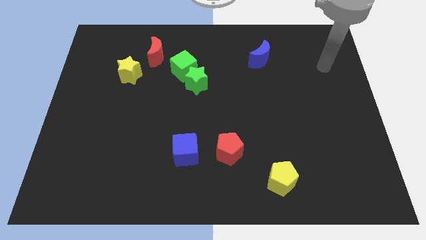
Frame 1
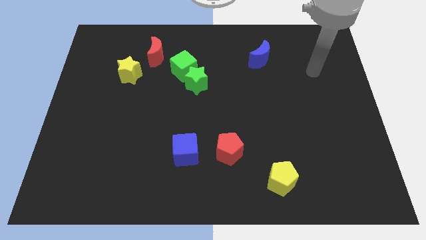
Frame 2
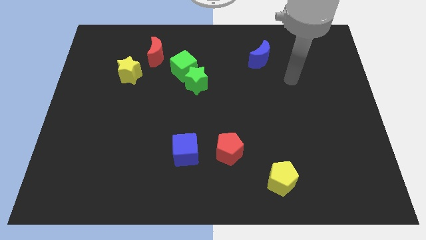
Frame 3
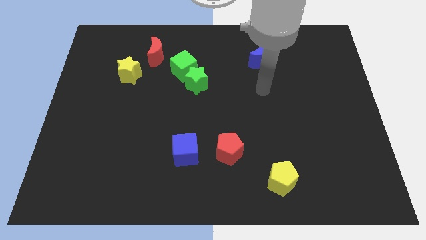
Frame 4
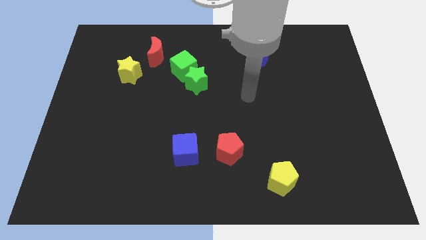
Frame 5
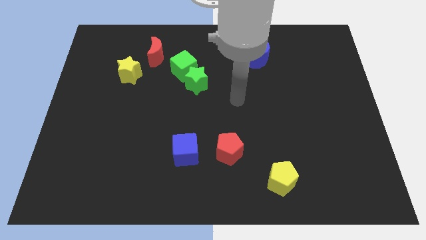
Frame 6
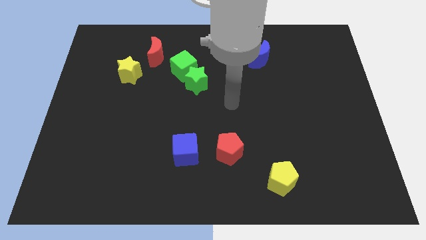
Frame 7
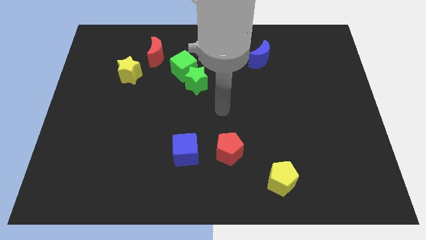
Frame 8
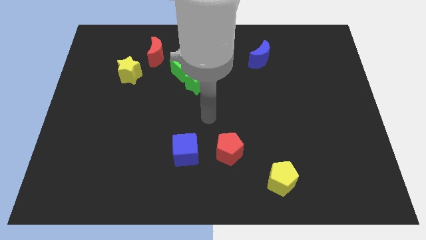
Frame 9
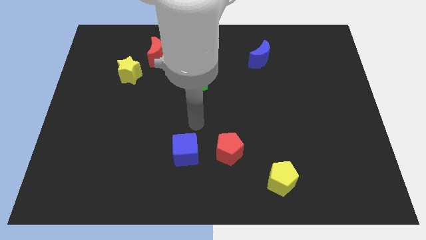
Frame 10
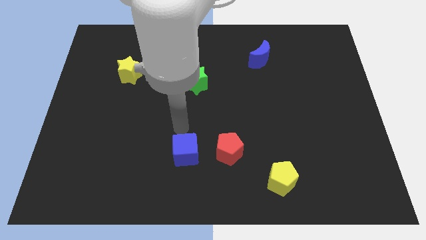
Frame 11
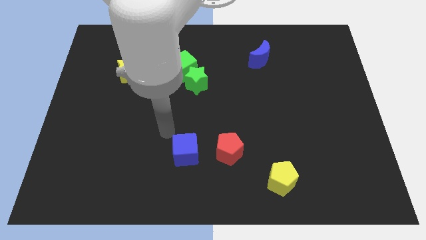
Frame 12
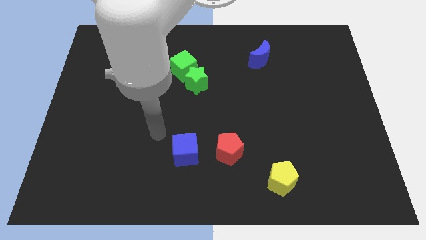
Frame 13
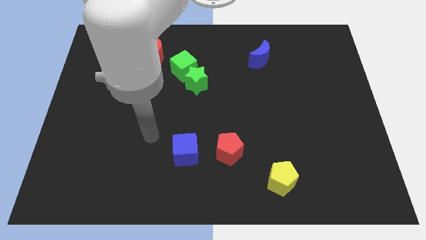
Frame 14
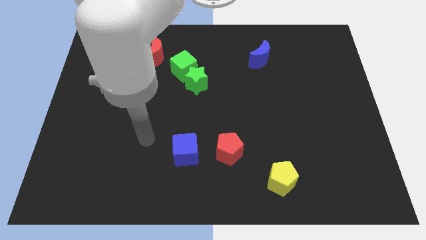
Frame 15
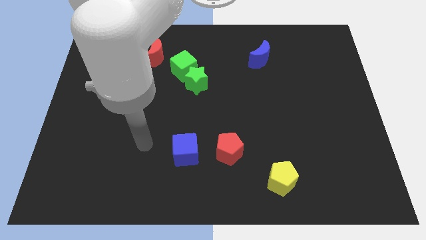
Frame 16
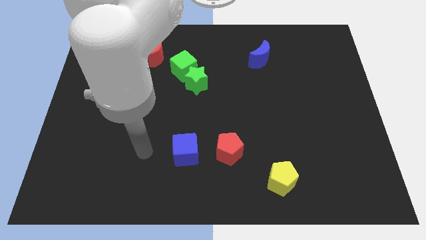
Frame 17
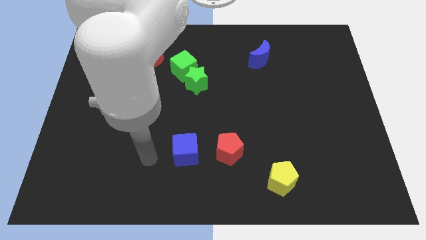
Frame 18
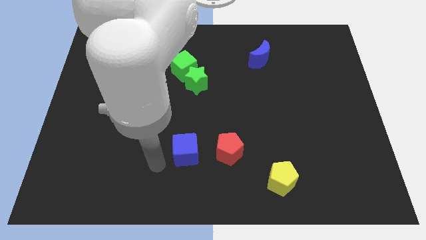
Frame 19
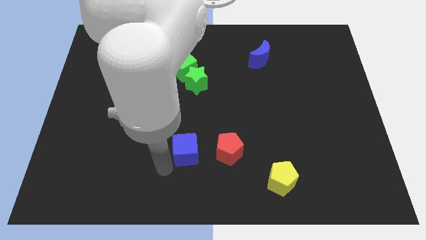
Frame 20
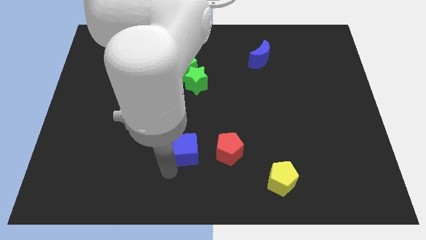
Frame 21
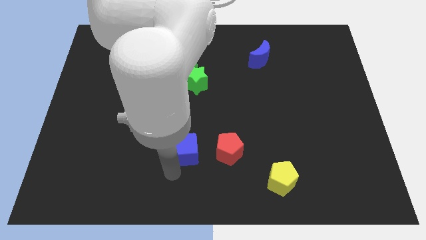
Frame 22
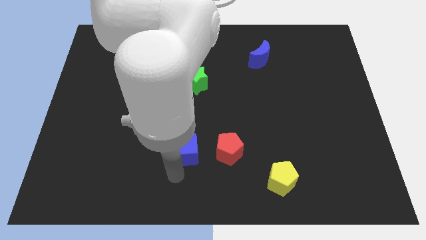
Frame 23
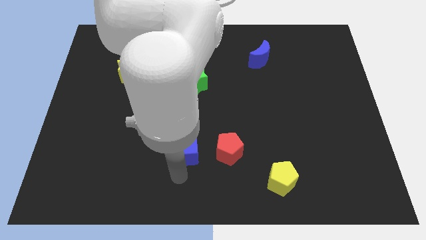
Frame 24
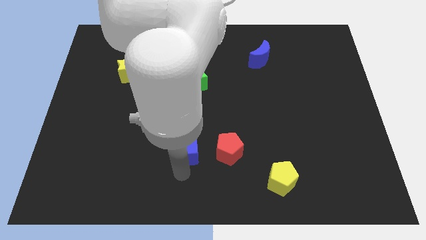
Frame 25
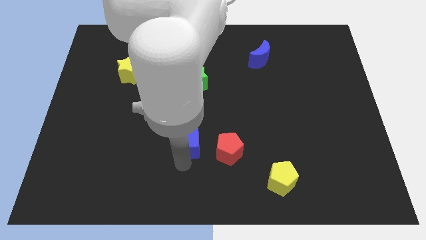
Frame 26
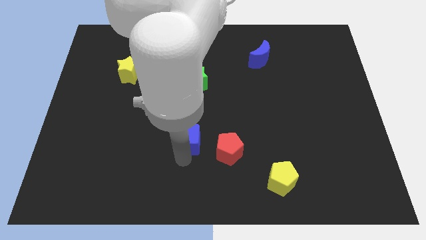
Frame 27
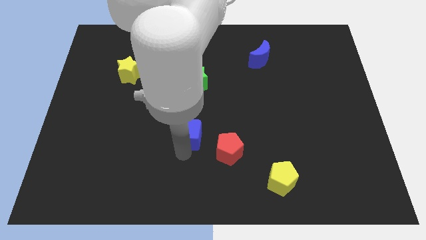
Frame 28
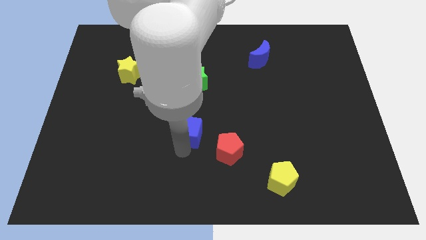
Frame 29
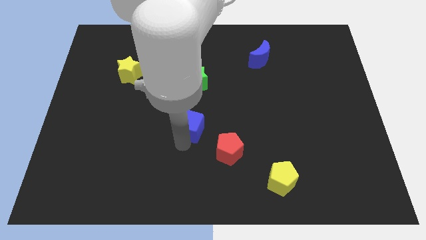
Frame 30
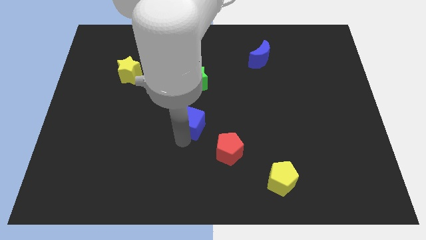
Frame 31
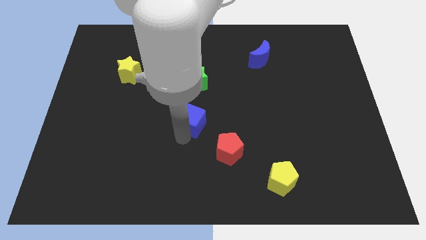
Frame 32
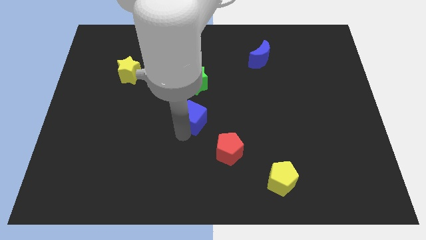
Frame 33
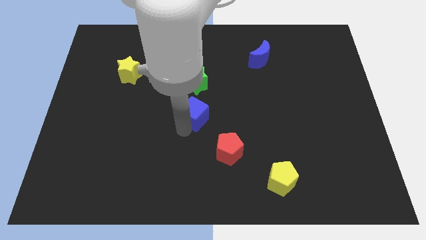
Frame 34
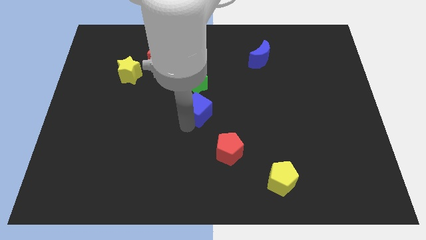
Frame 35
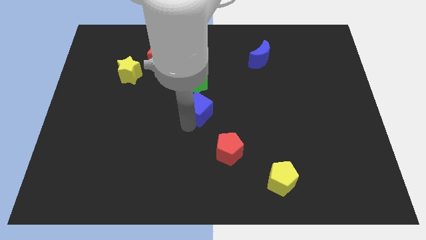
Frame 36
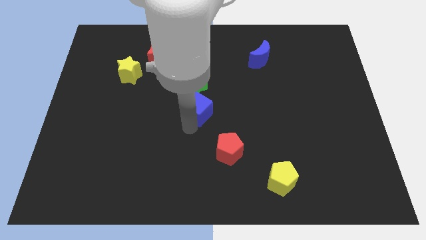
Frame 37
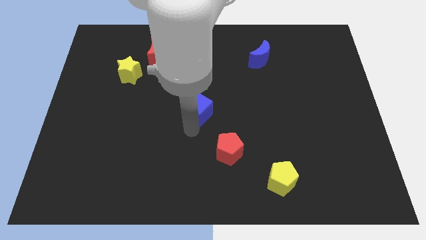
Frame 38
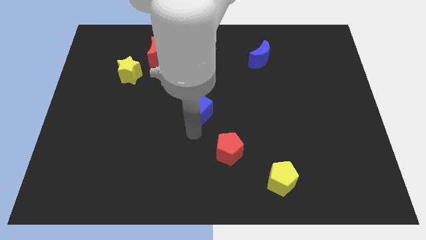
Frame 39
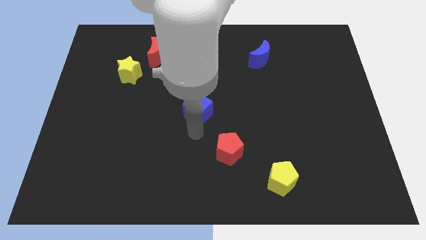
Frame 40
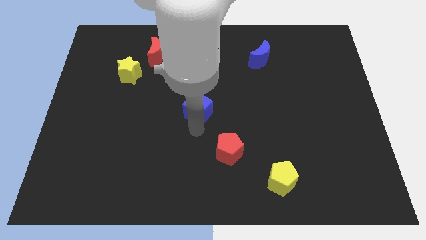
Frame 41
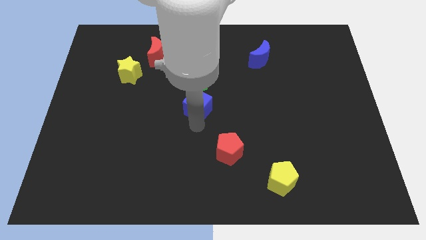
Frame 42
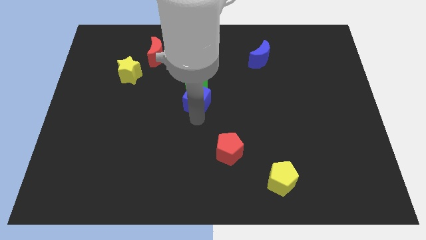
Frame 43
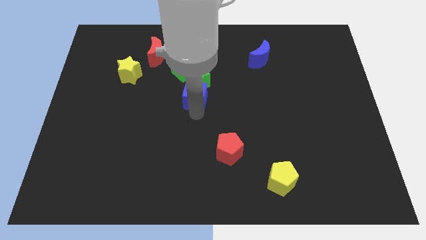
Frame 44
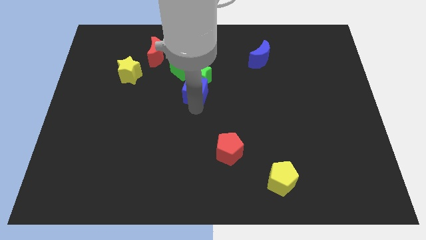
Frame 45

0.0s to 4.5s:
put the blue cube next to the green star

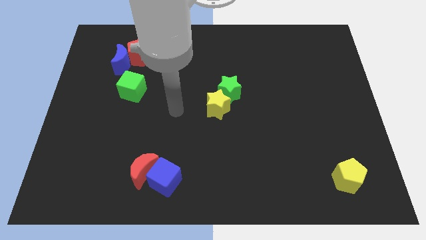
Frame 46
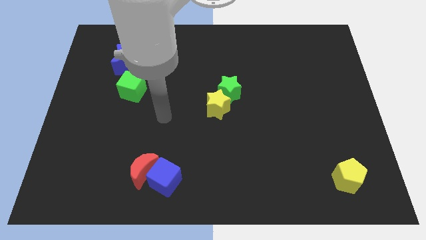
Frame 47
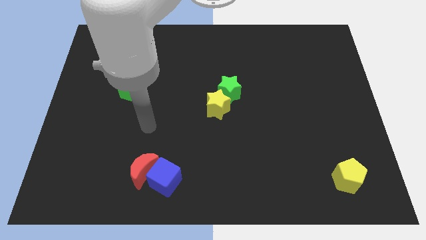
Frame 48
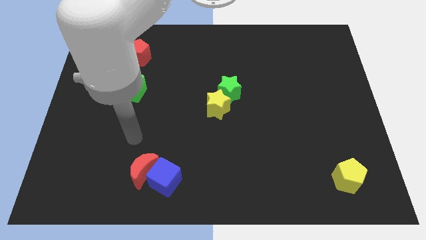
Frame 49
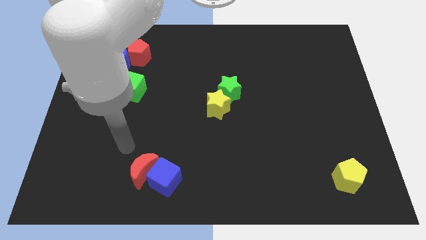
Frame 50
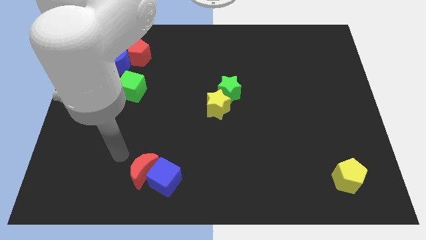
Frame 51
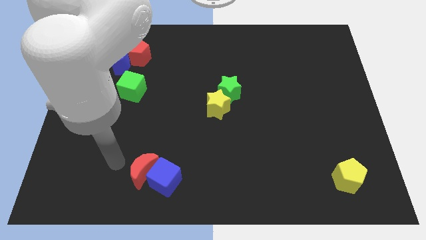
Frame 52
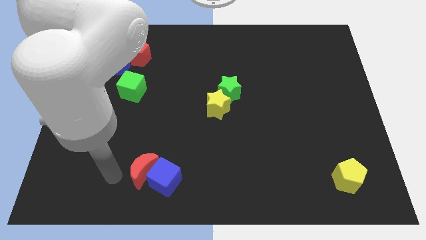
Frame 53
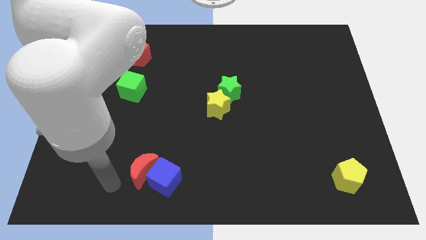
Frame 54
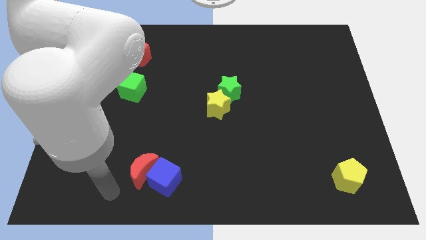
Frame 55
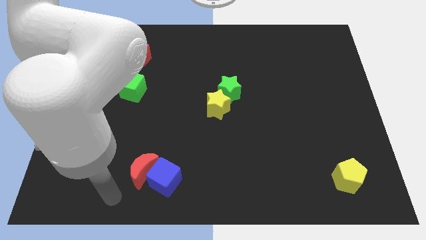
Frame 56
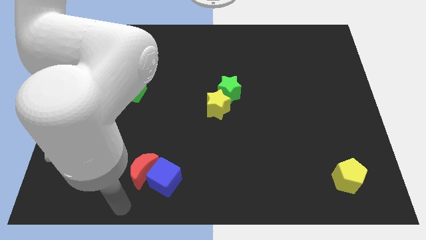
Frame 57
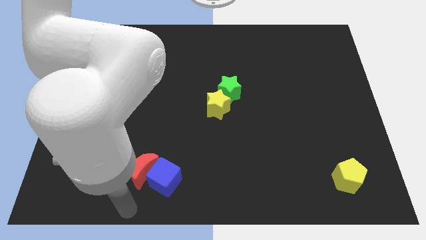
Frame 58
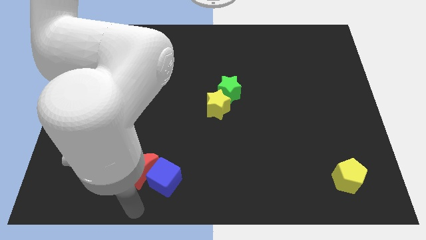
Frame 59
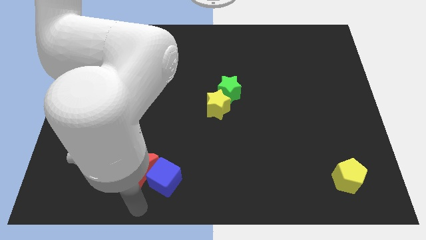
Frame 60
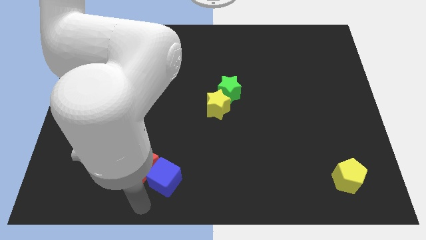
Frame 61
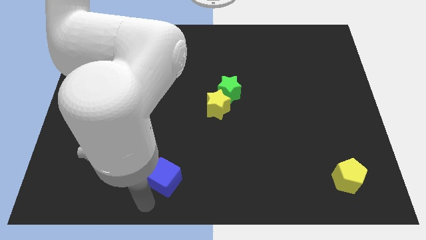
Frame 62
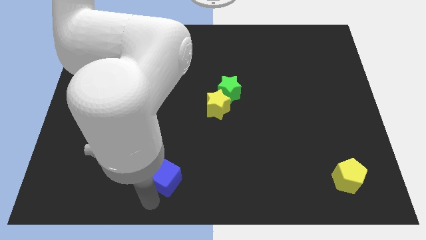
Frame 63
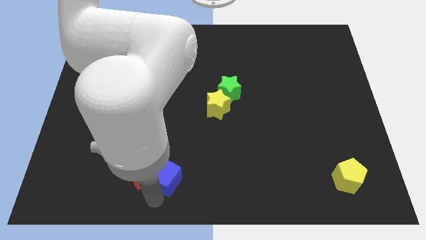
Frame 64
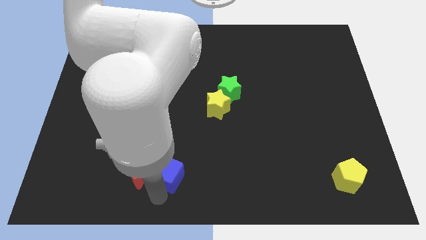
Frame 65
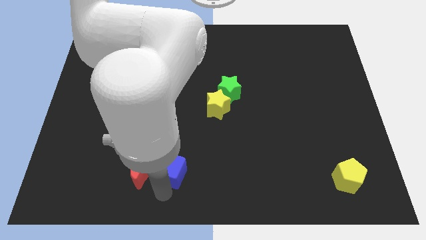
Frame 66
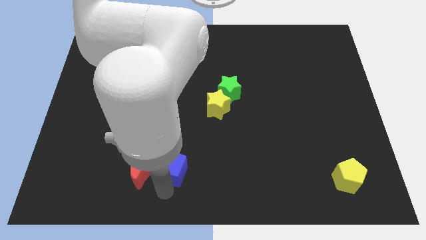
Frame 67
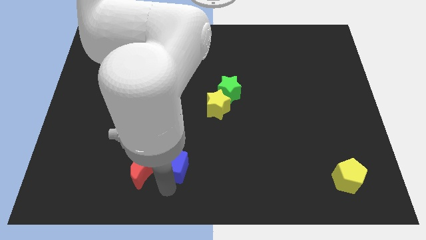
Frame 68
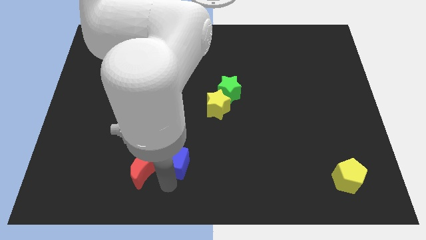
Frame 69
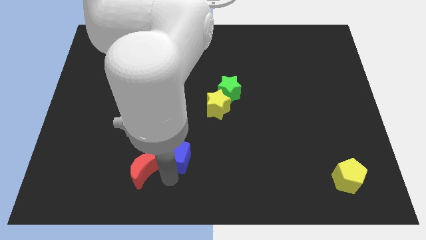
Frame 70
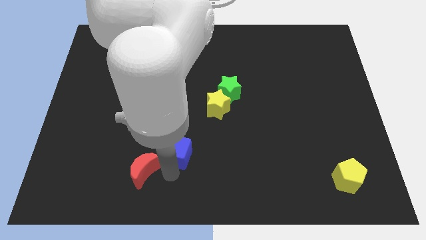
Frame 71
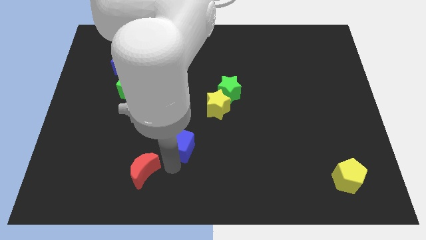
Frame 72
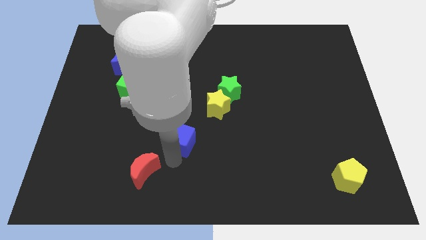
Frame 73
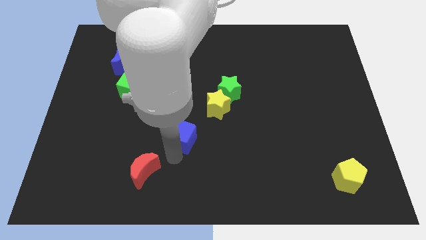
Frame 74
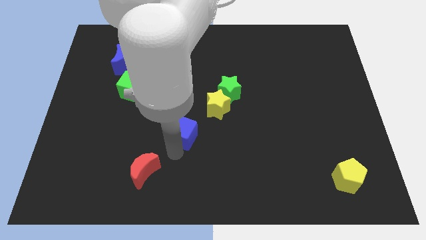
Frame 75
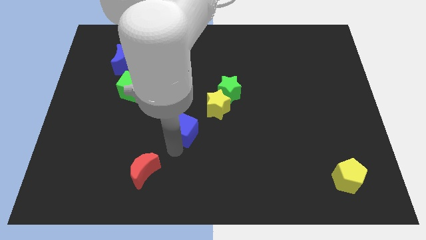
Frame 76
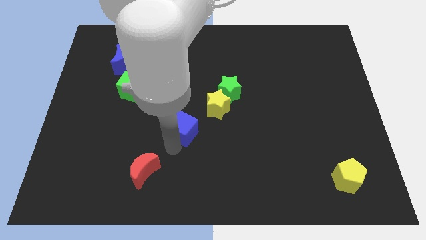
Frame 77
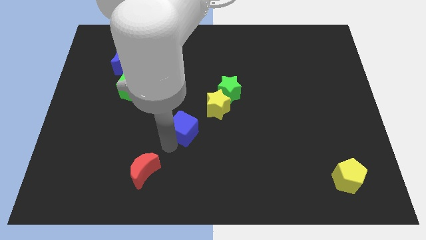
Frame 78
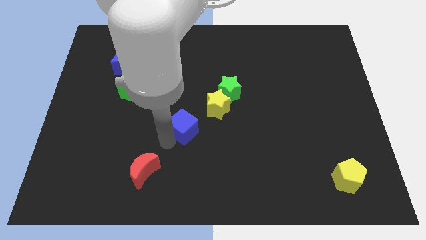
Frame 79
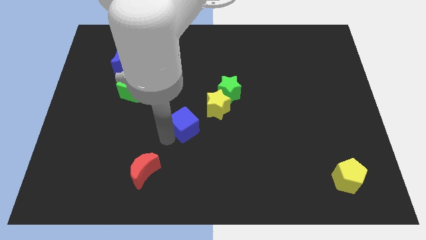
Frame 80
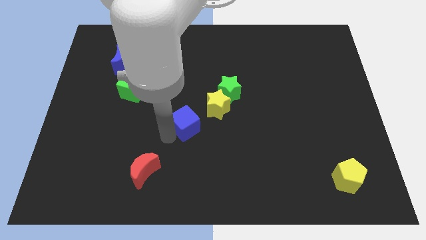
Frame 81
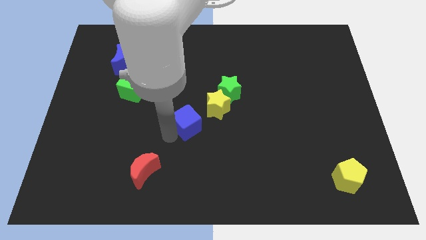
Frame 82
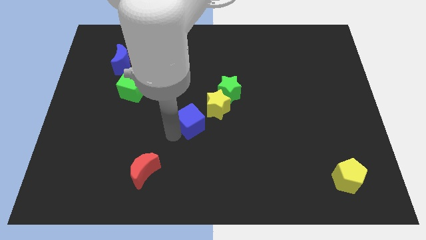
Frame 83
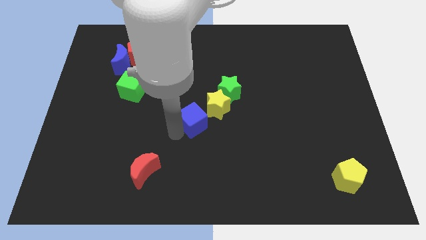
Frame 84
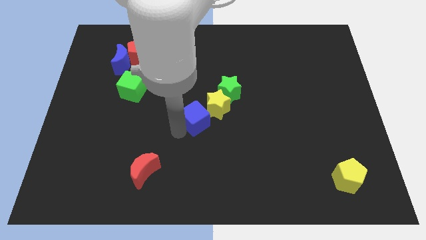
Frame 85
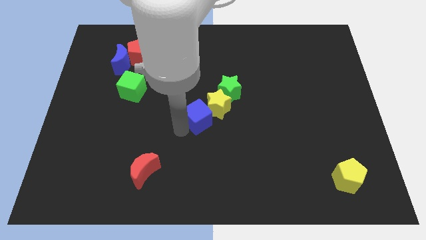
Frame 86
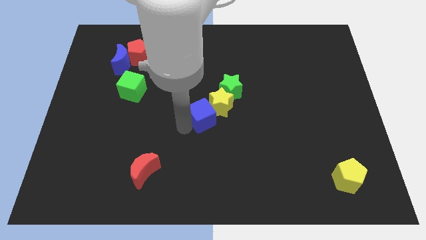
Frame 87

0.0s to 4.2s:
move the blue cube towards the yellow star
